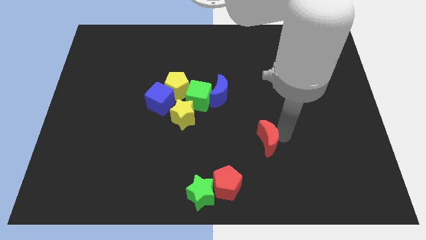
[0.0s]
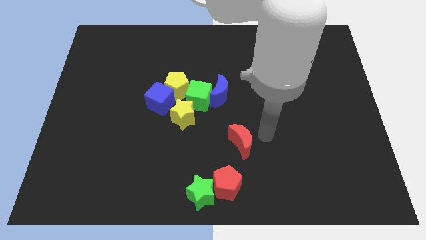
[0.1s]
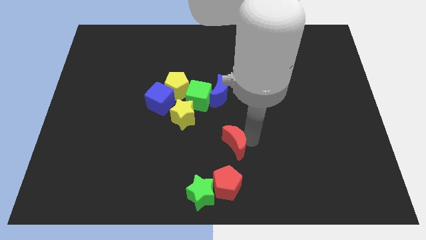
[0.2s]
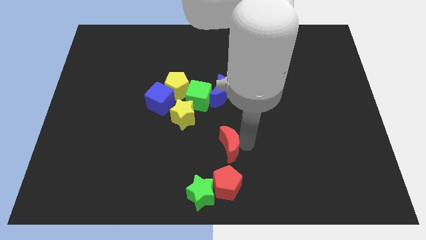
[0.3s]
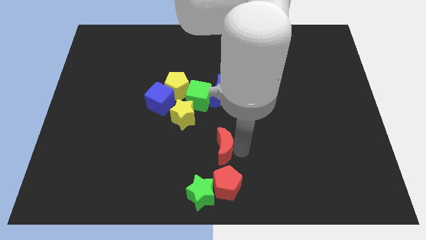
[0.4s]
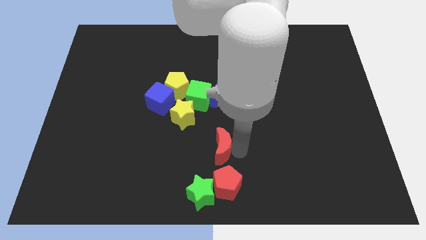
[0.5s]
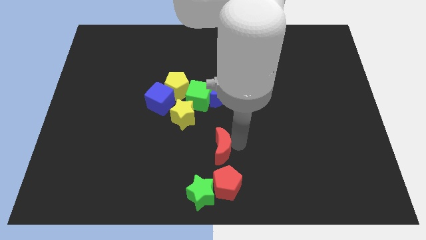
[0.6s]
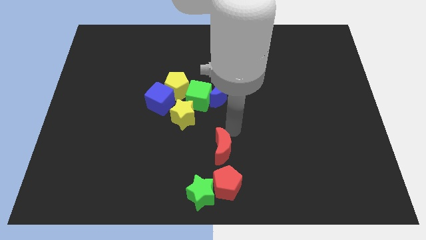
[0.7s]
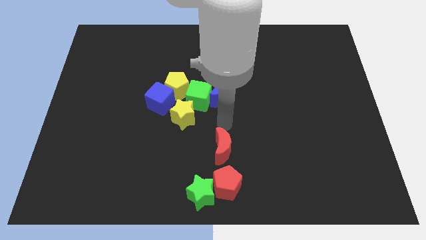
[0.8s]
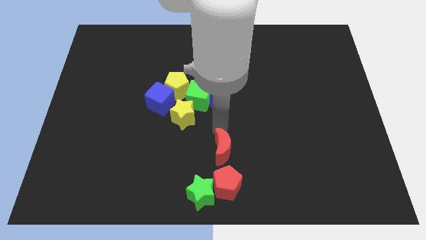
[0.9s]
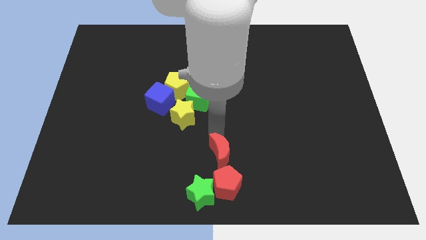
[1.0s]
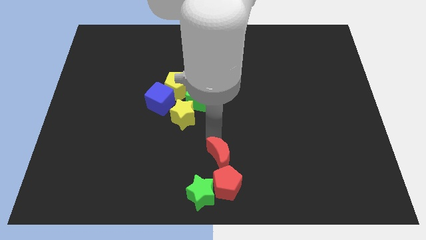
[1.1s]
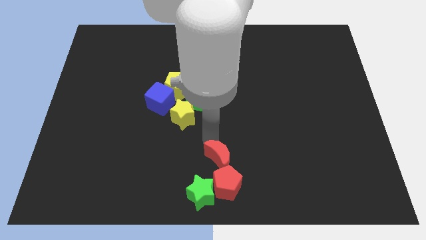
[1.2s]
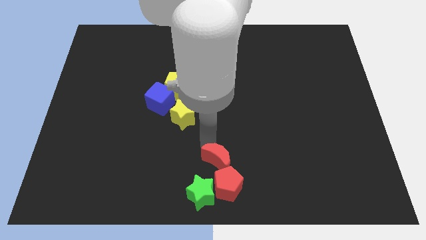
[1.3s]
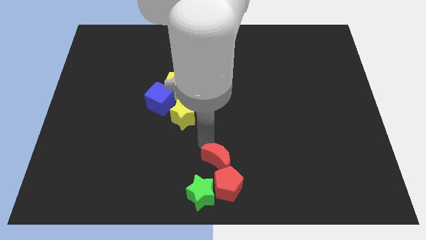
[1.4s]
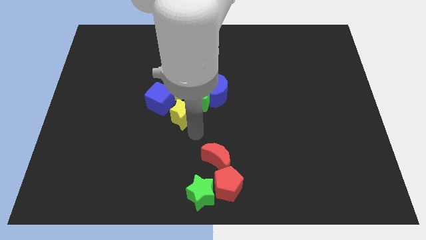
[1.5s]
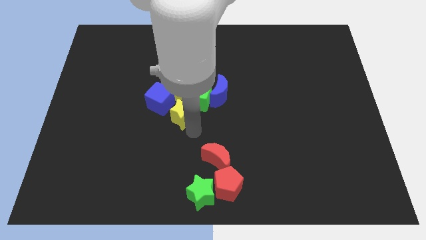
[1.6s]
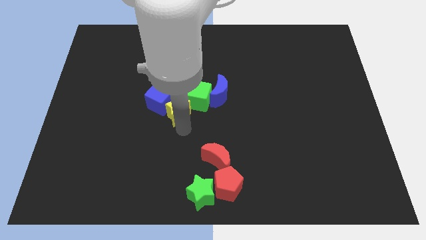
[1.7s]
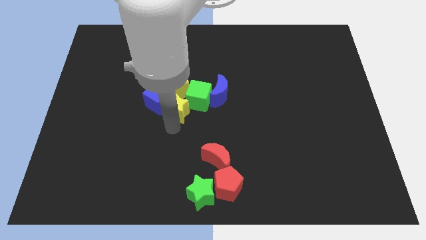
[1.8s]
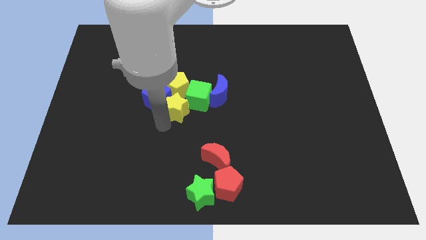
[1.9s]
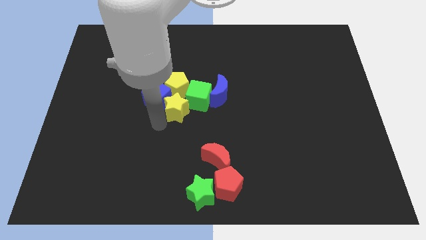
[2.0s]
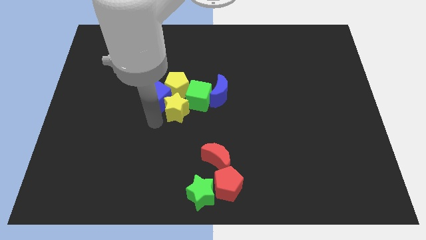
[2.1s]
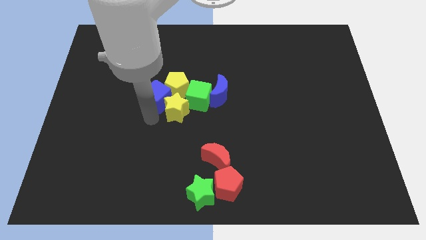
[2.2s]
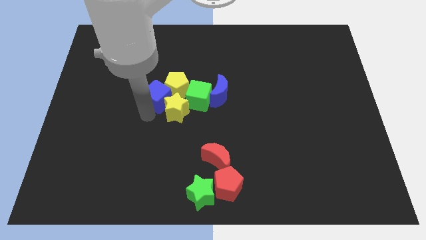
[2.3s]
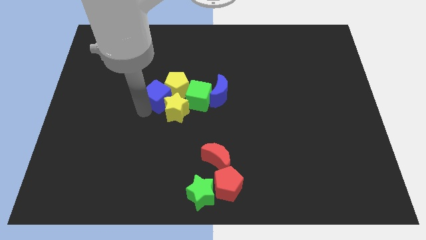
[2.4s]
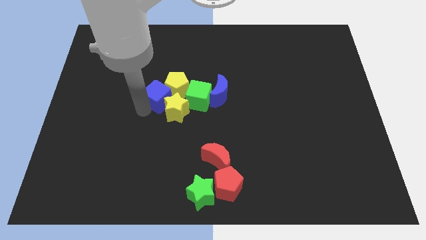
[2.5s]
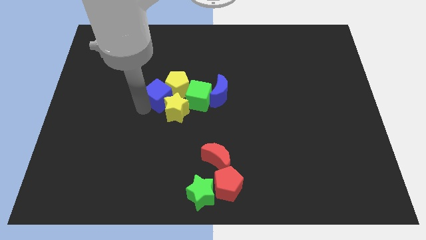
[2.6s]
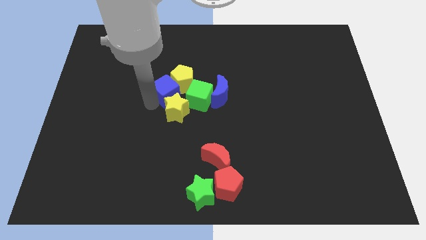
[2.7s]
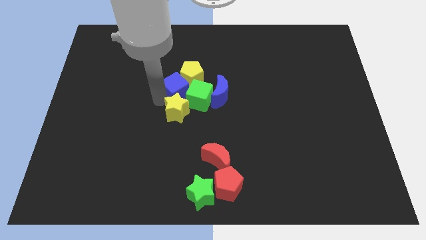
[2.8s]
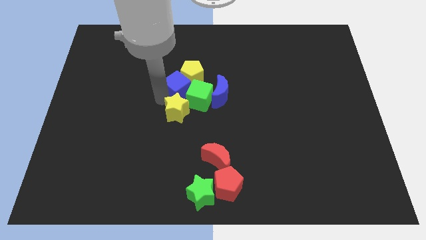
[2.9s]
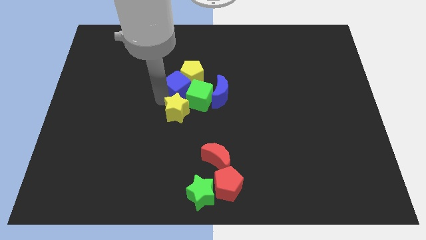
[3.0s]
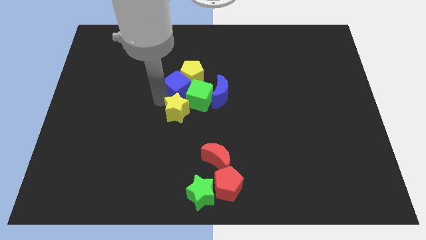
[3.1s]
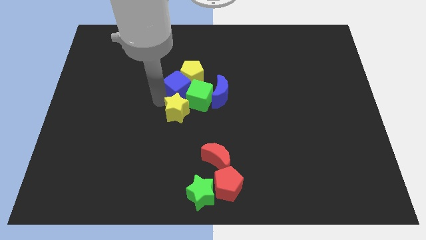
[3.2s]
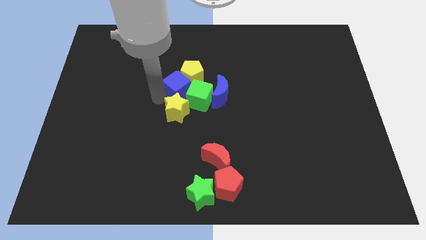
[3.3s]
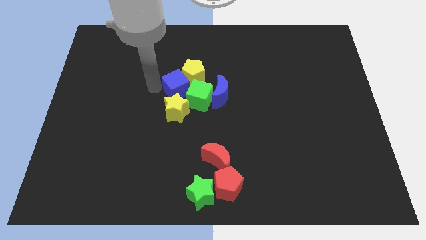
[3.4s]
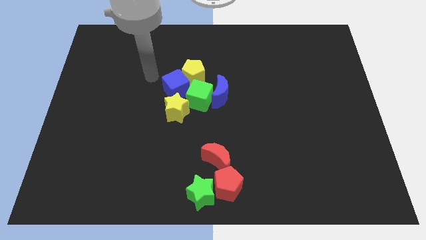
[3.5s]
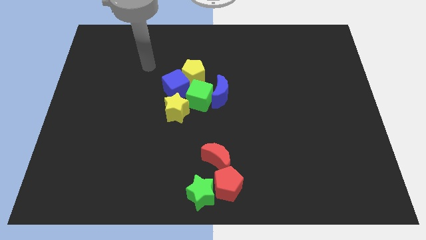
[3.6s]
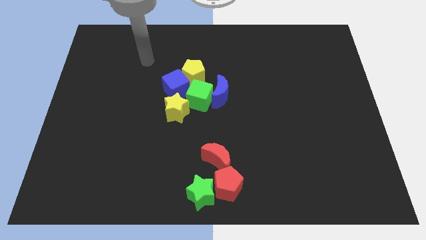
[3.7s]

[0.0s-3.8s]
place the red moon above the red pentagon

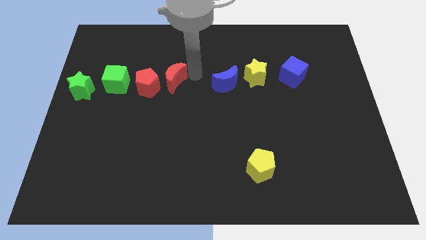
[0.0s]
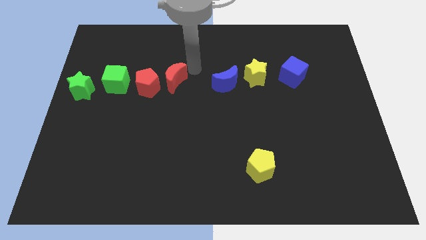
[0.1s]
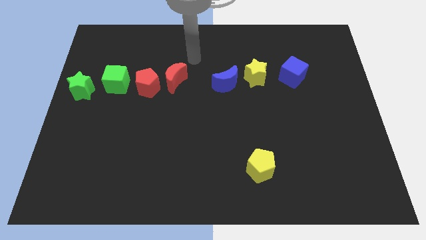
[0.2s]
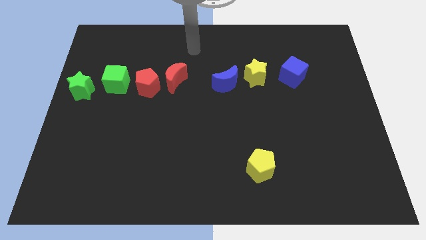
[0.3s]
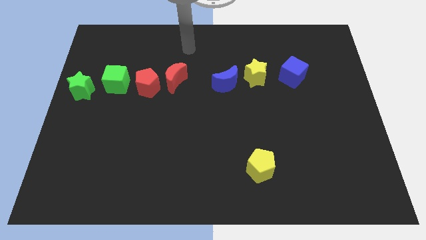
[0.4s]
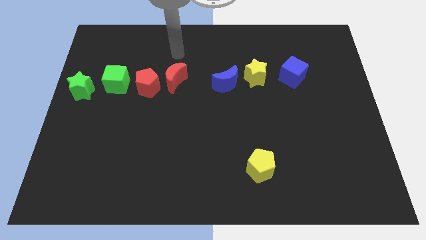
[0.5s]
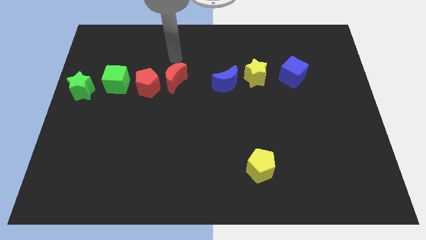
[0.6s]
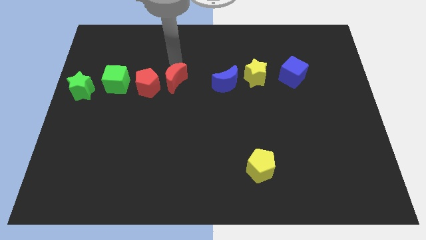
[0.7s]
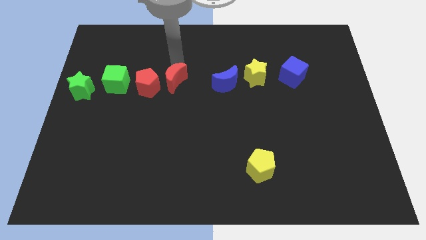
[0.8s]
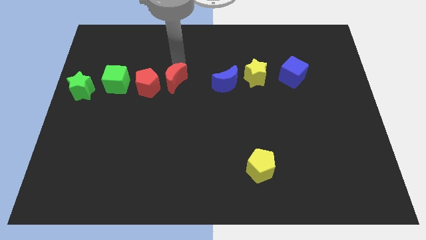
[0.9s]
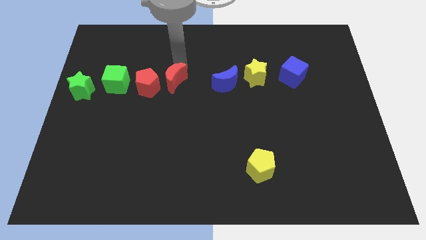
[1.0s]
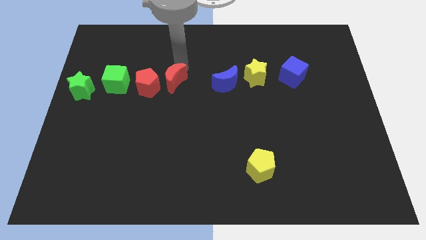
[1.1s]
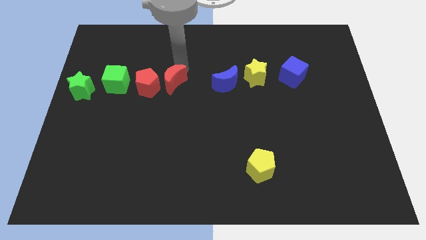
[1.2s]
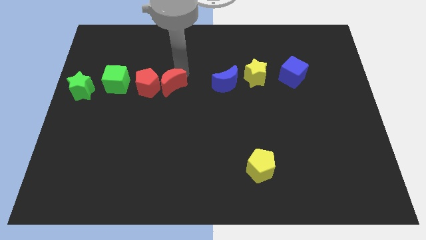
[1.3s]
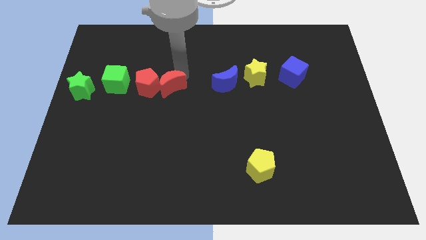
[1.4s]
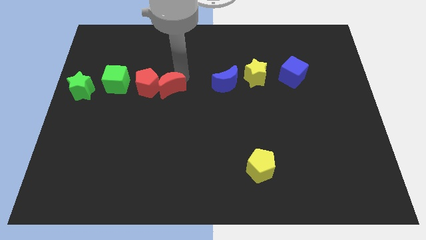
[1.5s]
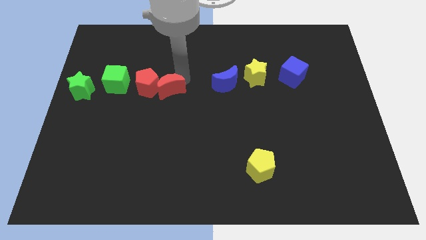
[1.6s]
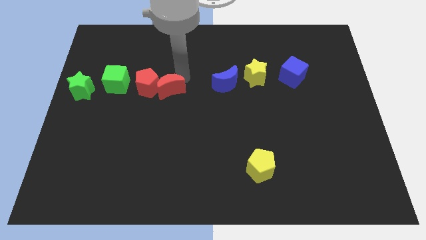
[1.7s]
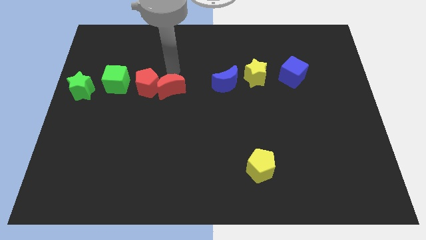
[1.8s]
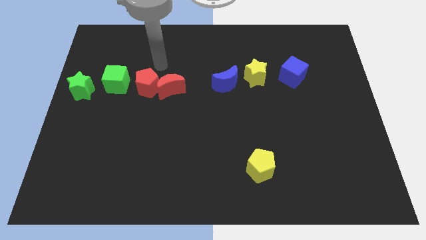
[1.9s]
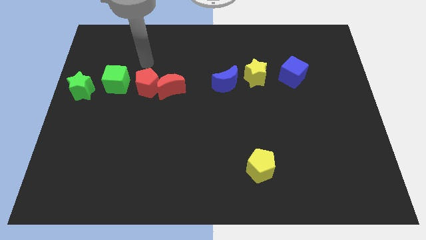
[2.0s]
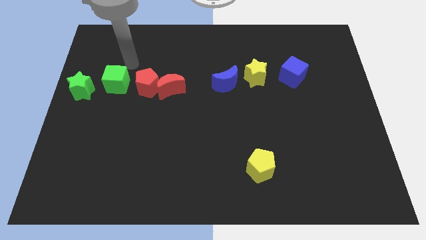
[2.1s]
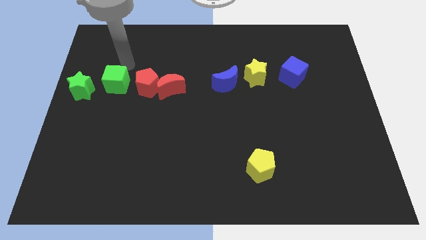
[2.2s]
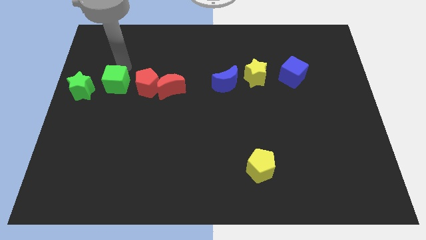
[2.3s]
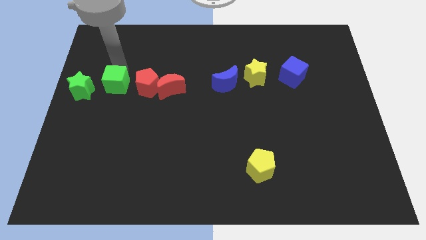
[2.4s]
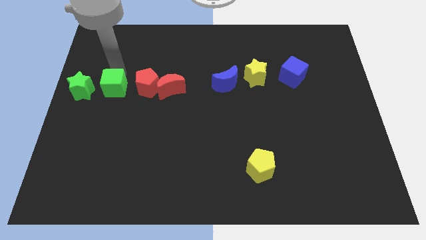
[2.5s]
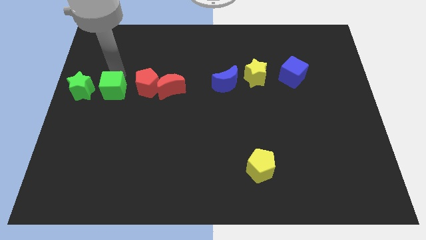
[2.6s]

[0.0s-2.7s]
slightly push the red moon downwards

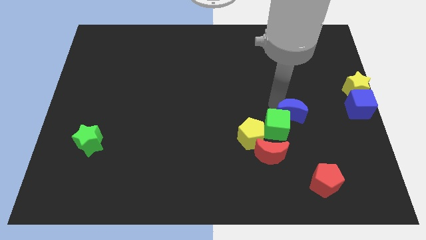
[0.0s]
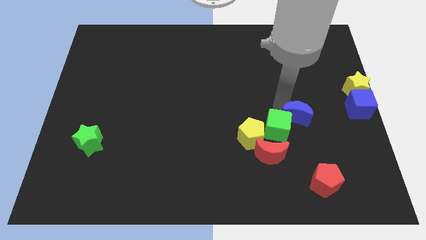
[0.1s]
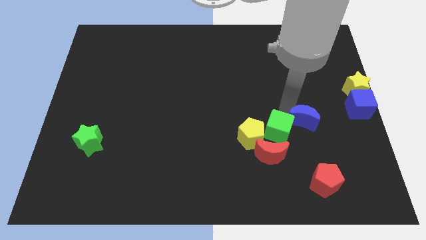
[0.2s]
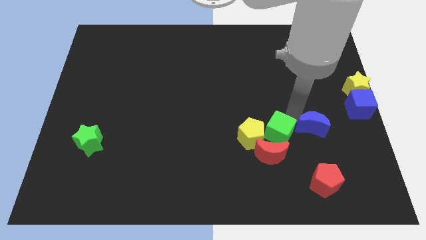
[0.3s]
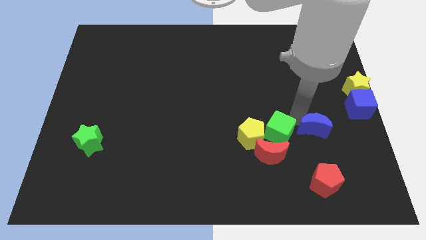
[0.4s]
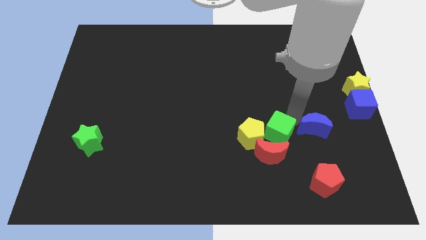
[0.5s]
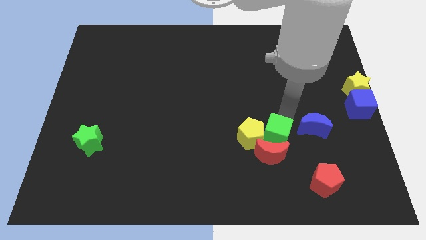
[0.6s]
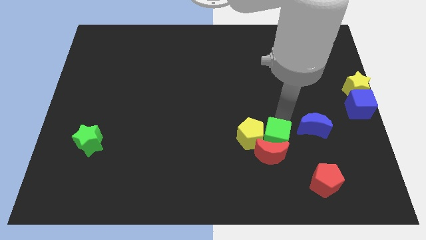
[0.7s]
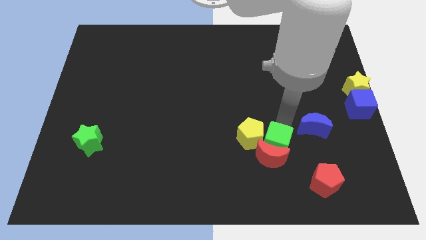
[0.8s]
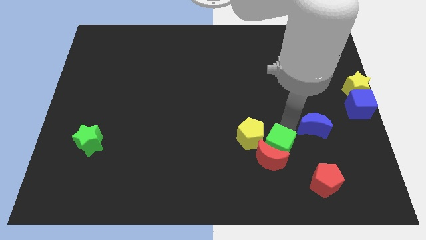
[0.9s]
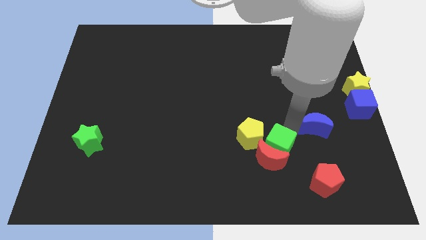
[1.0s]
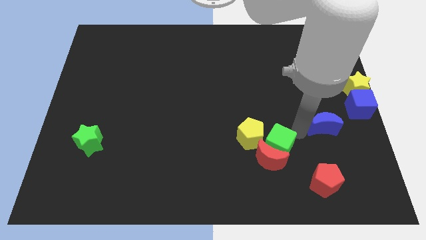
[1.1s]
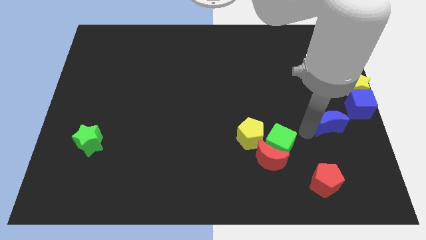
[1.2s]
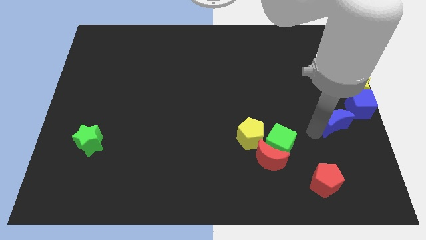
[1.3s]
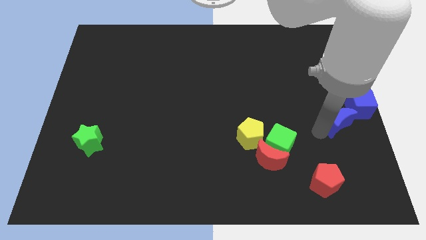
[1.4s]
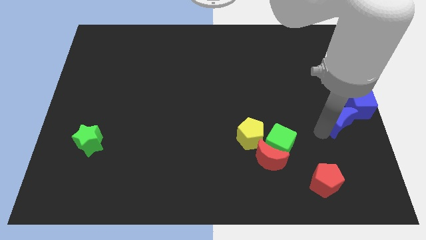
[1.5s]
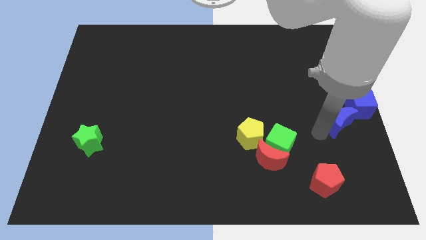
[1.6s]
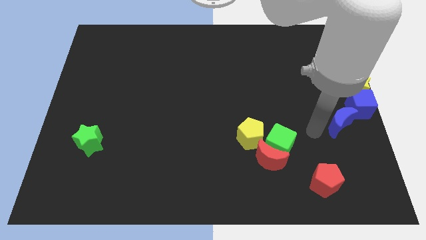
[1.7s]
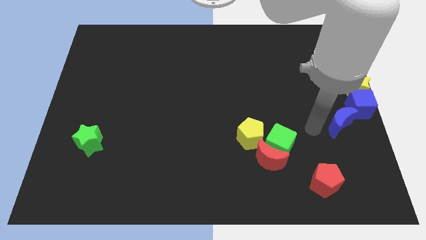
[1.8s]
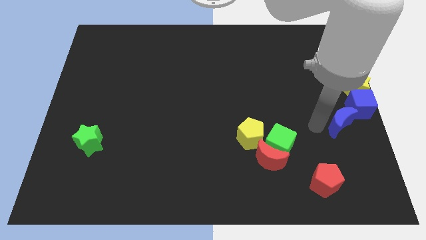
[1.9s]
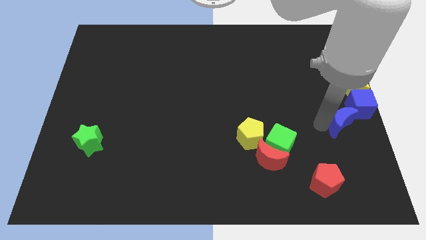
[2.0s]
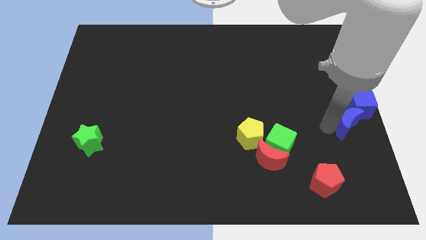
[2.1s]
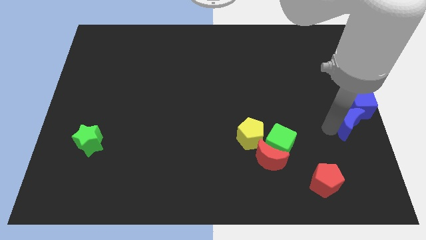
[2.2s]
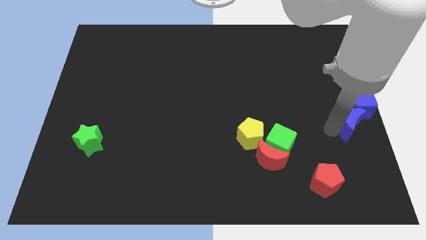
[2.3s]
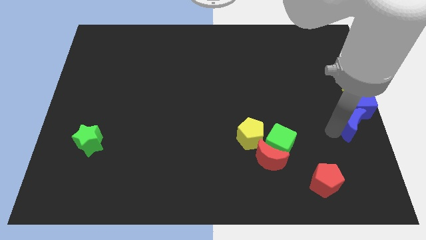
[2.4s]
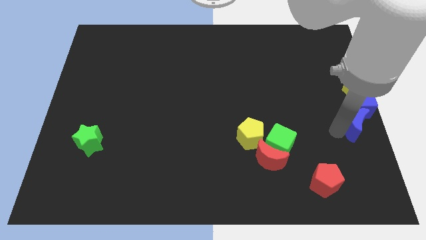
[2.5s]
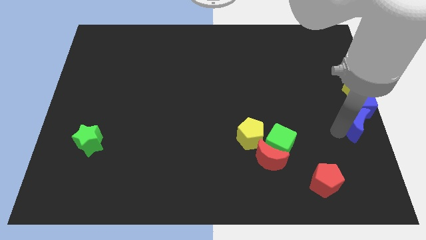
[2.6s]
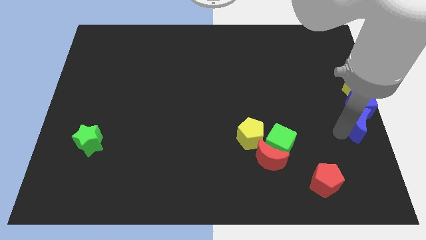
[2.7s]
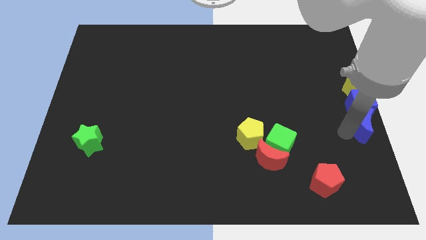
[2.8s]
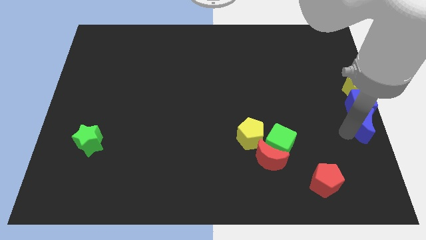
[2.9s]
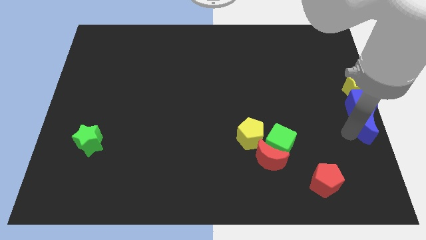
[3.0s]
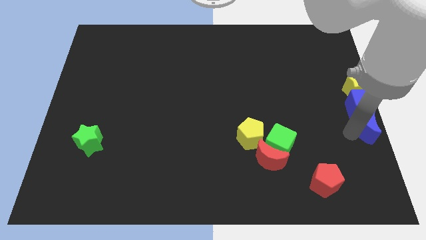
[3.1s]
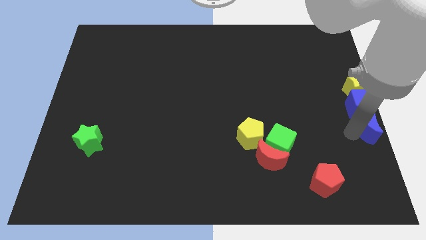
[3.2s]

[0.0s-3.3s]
place blue moon below the blue cube
